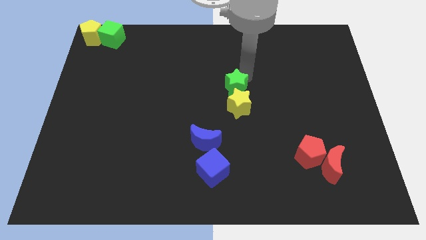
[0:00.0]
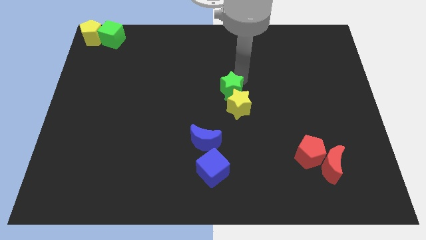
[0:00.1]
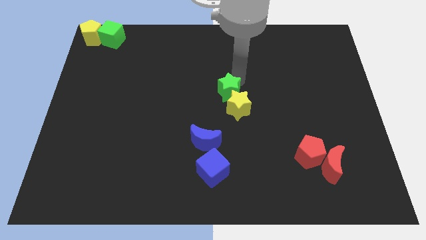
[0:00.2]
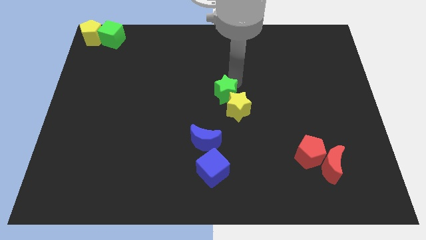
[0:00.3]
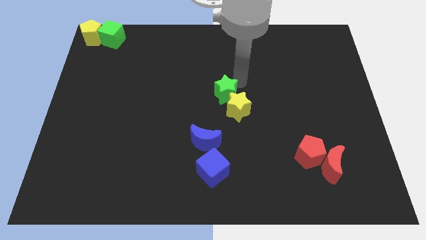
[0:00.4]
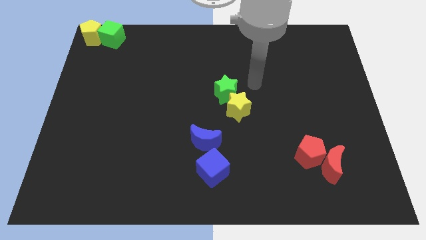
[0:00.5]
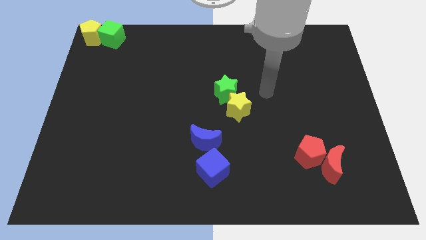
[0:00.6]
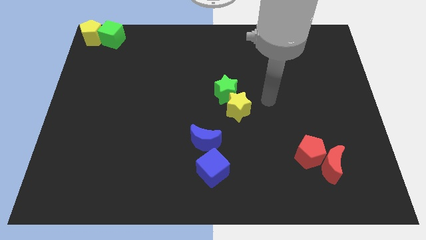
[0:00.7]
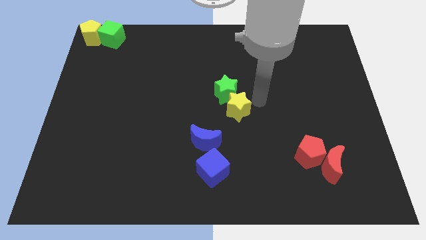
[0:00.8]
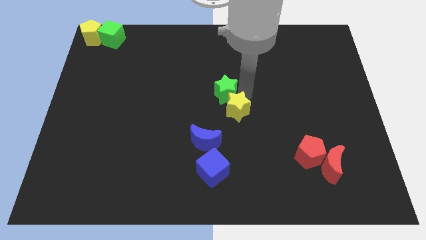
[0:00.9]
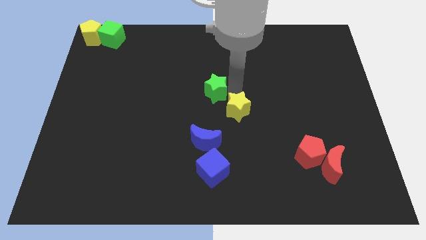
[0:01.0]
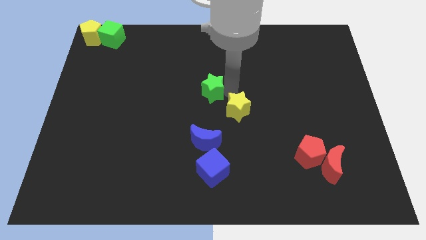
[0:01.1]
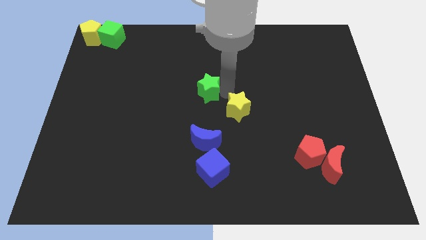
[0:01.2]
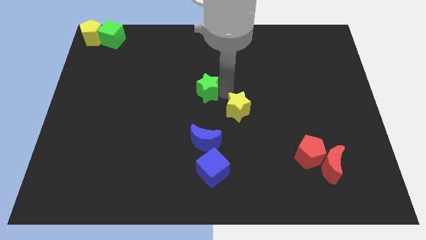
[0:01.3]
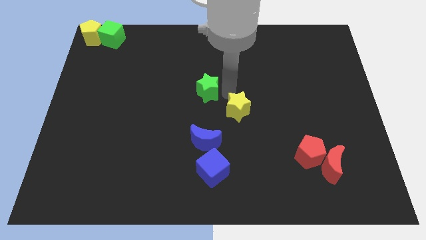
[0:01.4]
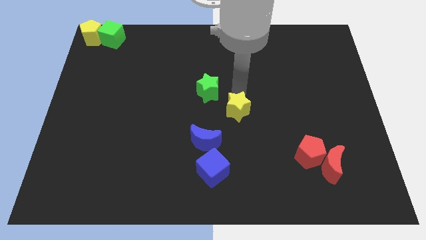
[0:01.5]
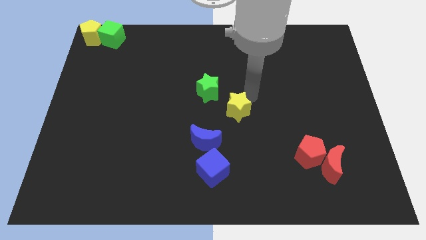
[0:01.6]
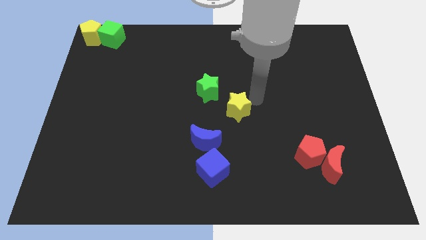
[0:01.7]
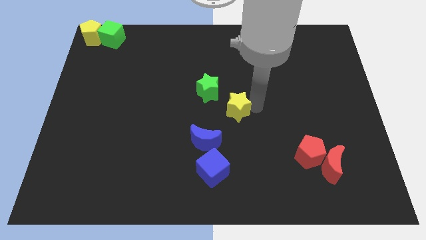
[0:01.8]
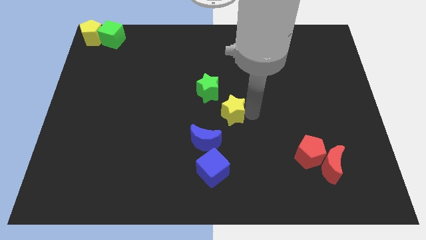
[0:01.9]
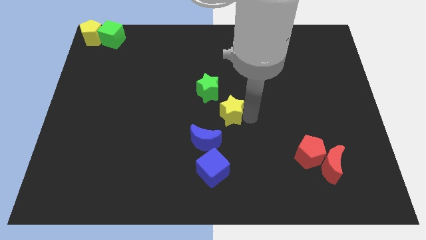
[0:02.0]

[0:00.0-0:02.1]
separate yellow and green stars

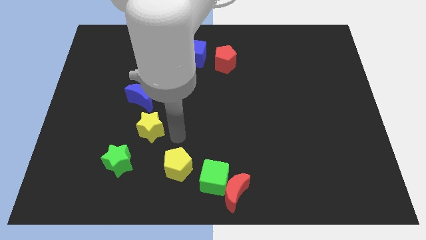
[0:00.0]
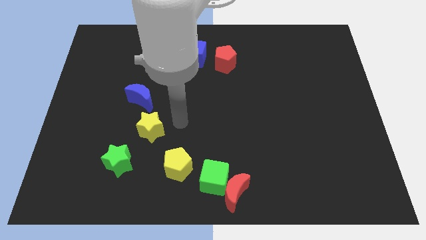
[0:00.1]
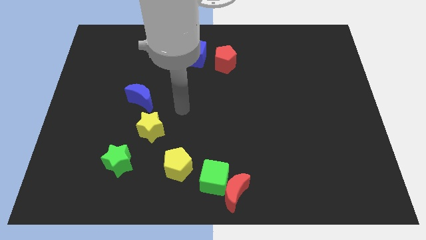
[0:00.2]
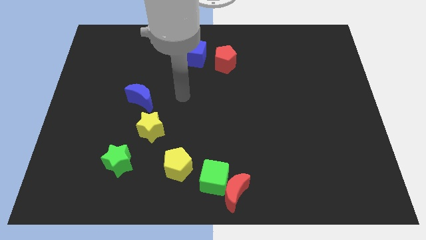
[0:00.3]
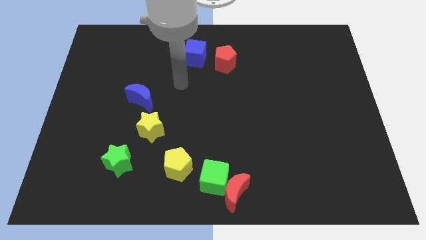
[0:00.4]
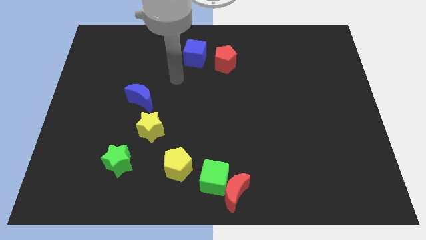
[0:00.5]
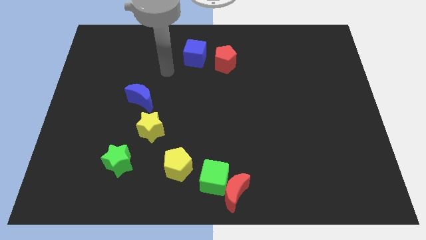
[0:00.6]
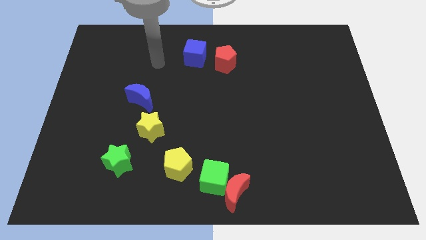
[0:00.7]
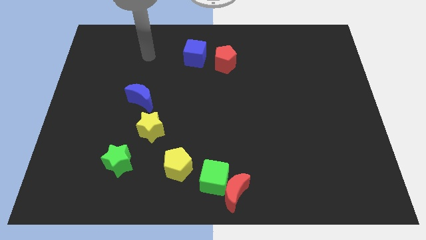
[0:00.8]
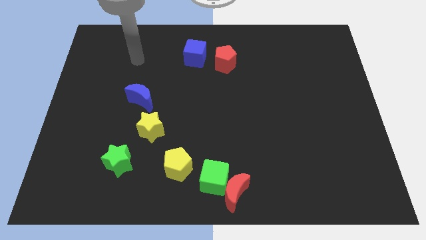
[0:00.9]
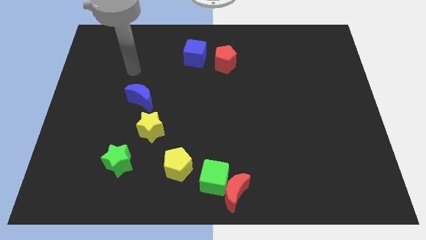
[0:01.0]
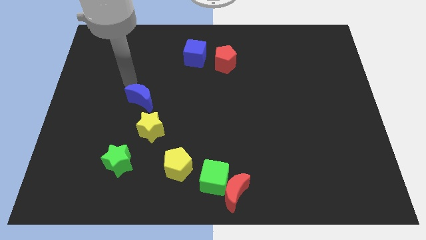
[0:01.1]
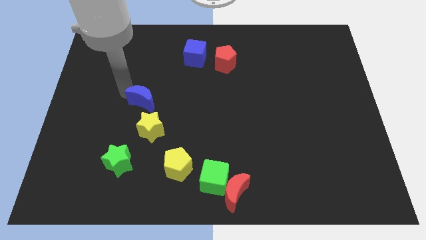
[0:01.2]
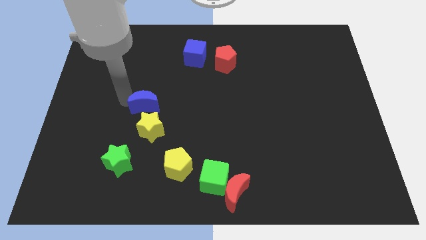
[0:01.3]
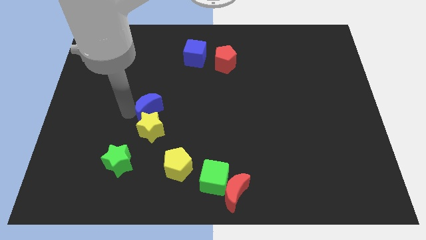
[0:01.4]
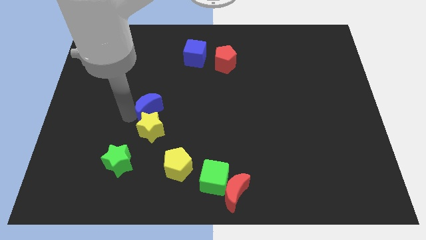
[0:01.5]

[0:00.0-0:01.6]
slide the blue moon to the top of the yellow star

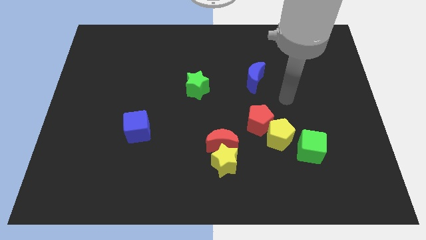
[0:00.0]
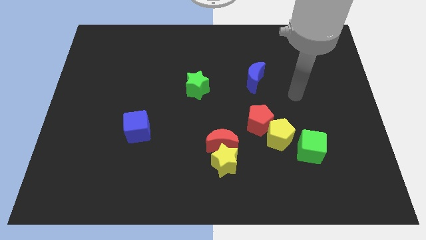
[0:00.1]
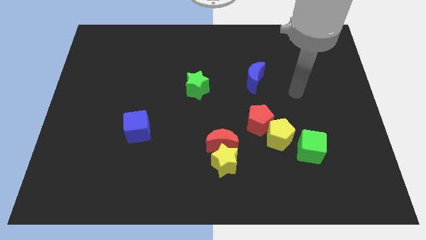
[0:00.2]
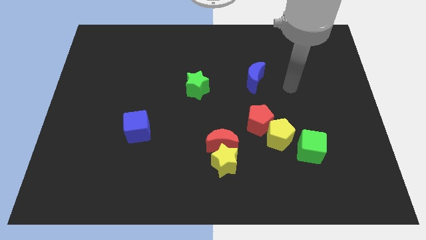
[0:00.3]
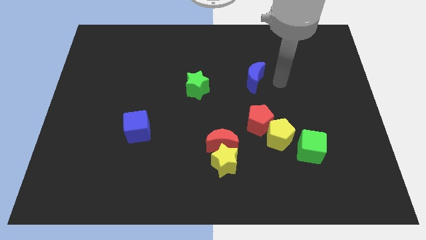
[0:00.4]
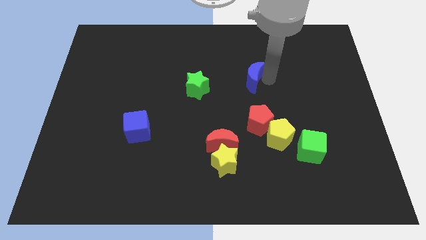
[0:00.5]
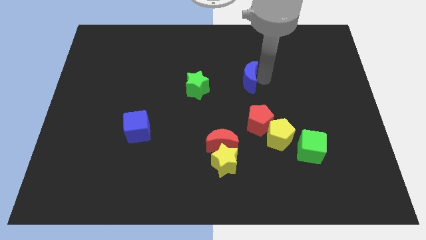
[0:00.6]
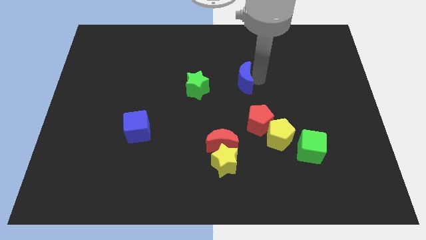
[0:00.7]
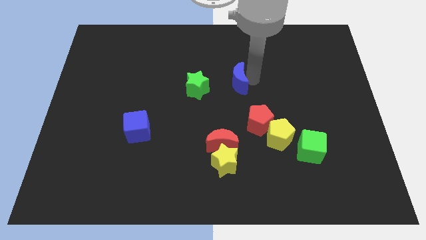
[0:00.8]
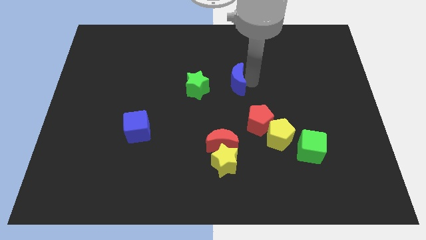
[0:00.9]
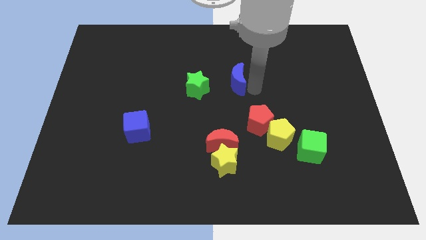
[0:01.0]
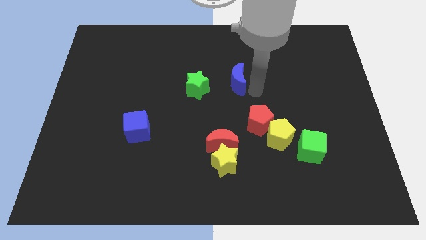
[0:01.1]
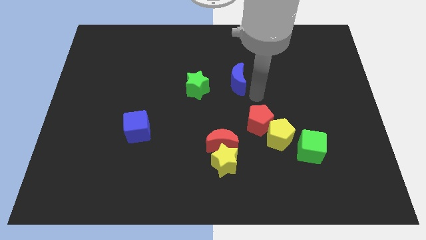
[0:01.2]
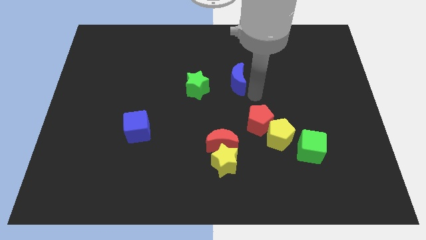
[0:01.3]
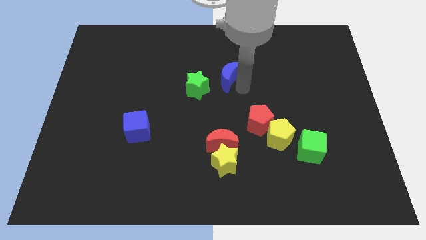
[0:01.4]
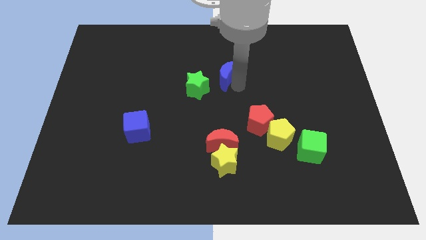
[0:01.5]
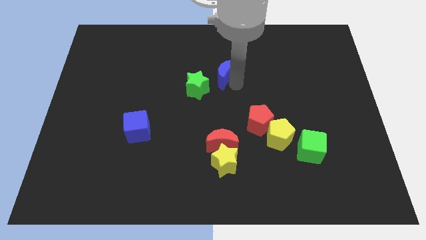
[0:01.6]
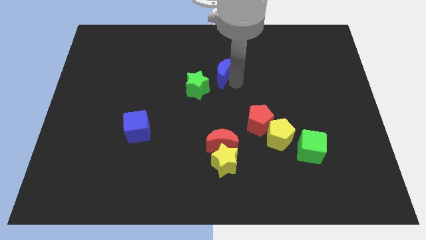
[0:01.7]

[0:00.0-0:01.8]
move the blue moon towards the green star

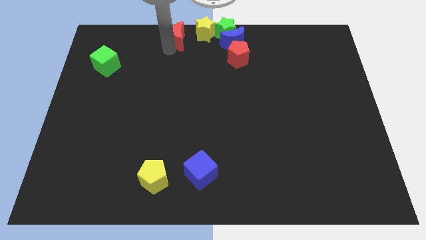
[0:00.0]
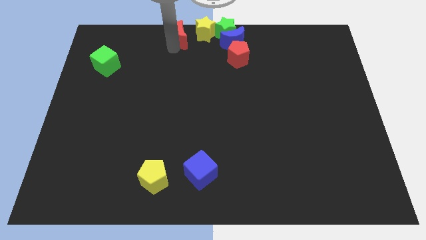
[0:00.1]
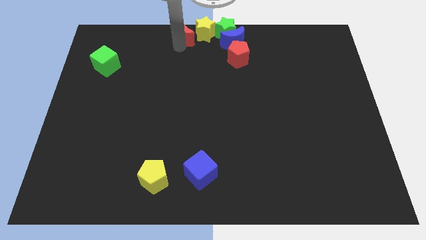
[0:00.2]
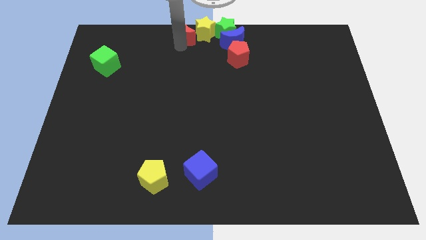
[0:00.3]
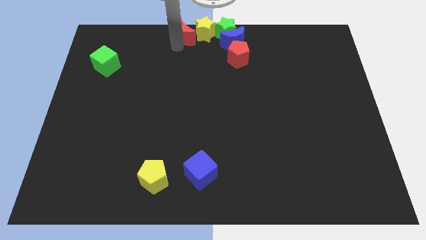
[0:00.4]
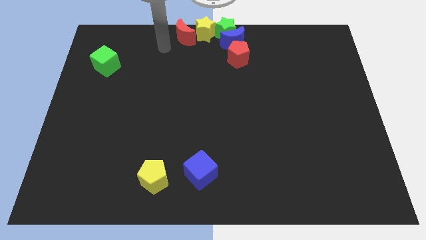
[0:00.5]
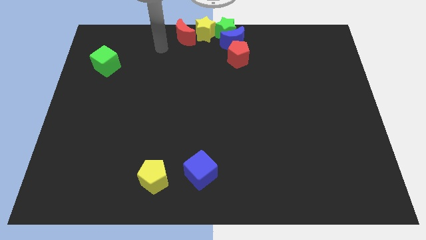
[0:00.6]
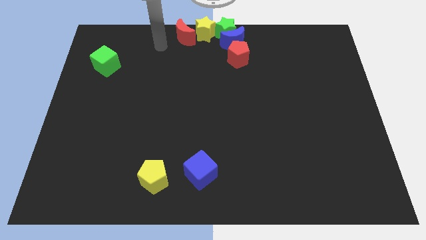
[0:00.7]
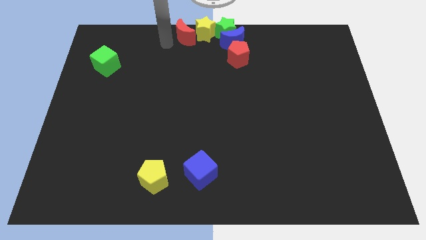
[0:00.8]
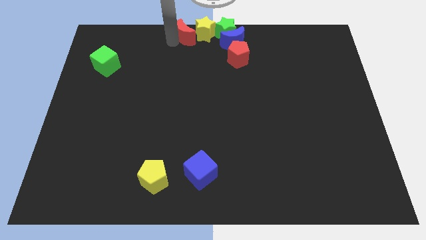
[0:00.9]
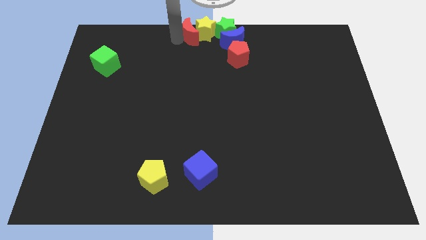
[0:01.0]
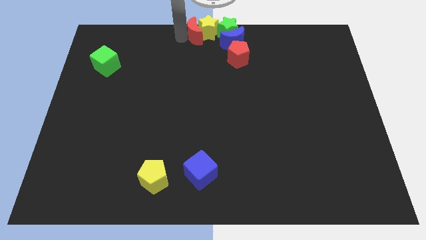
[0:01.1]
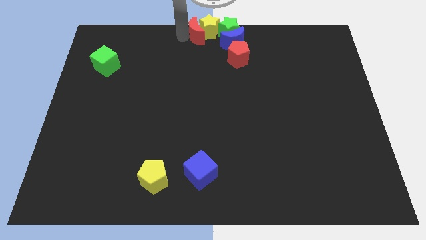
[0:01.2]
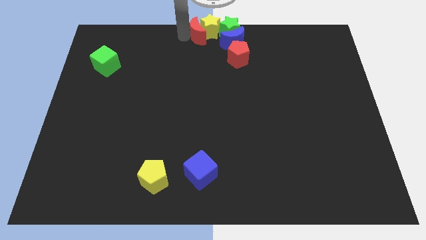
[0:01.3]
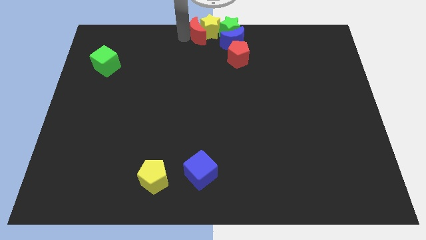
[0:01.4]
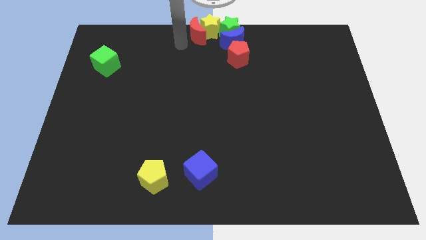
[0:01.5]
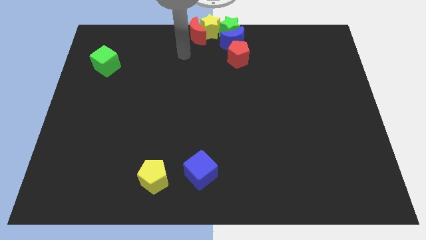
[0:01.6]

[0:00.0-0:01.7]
slide the red moon into the yellow star

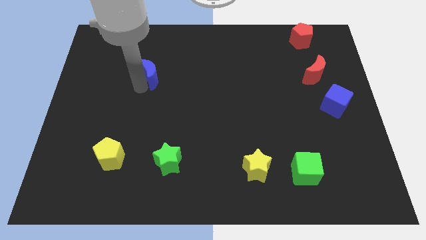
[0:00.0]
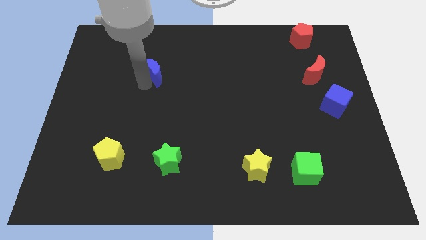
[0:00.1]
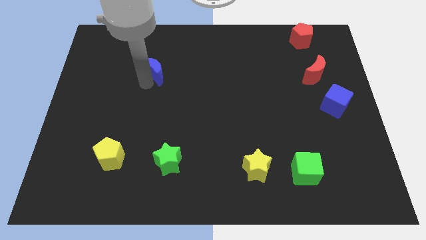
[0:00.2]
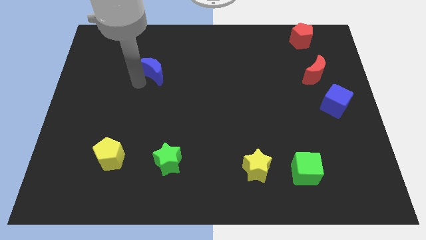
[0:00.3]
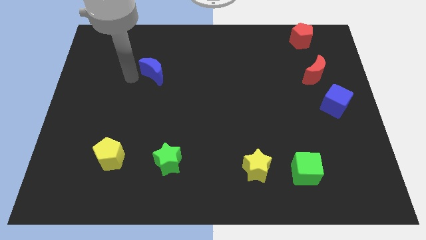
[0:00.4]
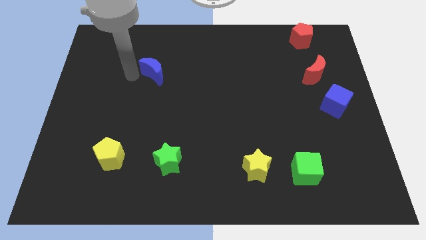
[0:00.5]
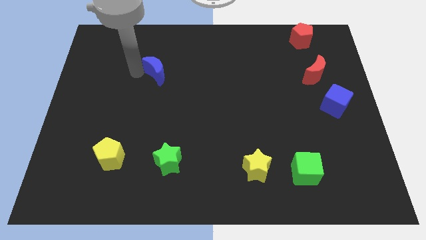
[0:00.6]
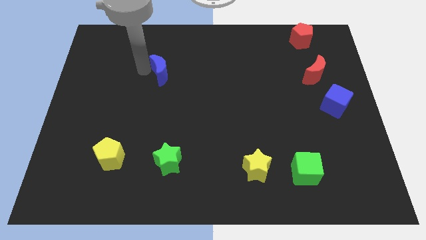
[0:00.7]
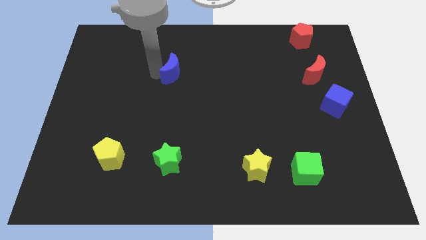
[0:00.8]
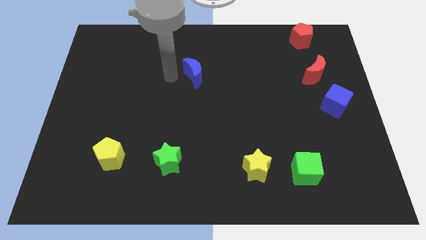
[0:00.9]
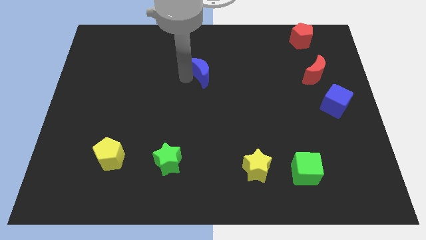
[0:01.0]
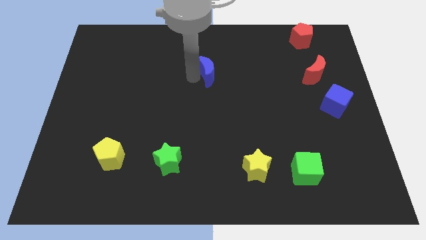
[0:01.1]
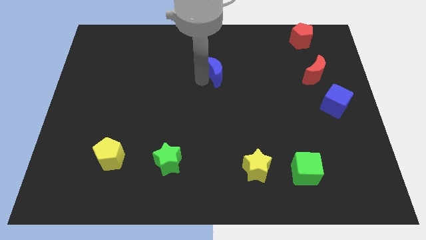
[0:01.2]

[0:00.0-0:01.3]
push the blue crescent to the right of the board

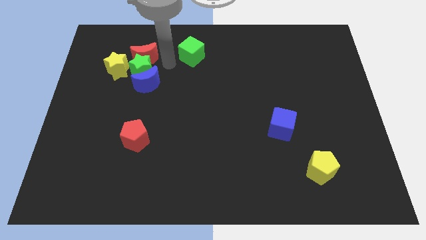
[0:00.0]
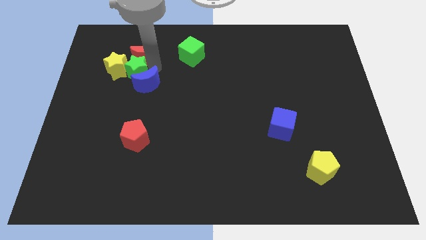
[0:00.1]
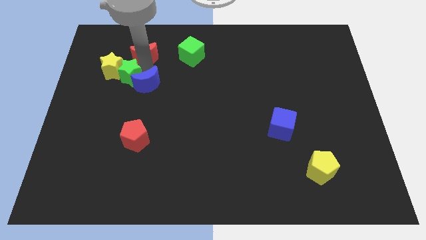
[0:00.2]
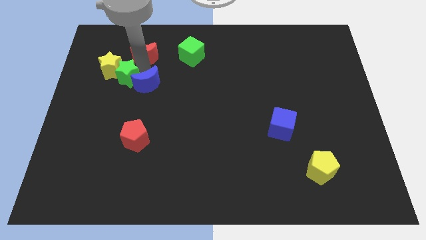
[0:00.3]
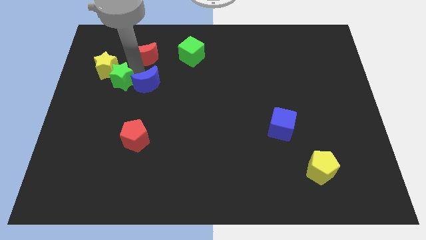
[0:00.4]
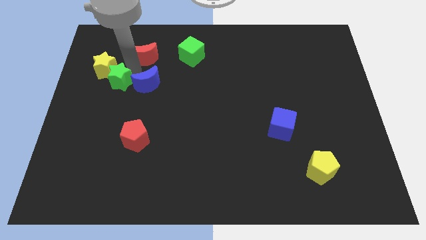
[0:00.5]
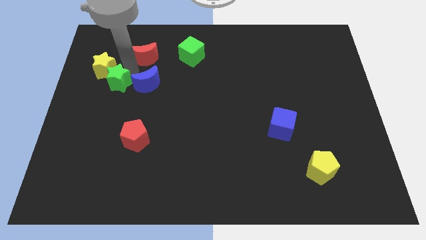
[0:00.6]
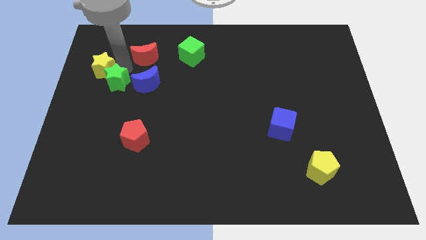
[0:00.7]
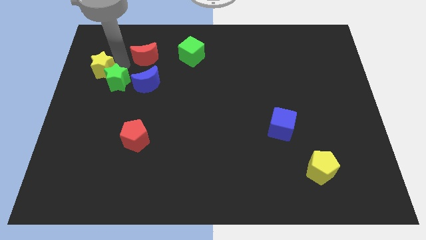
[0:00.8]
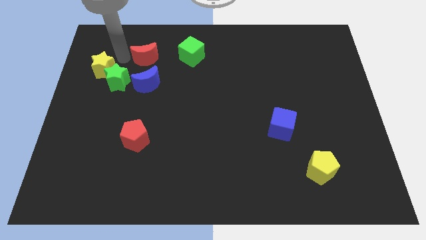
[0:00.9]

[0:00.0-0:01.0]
push green star and yellow star slightly left
